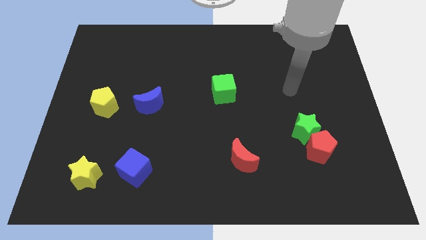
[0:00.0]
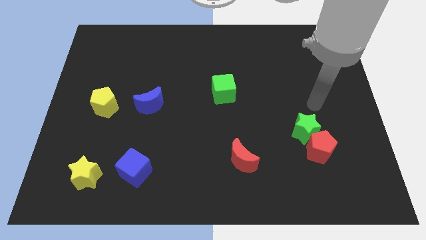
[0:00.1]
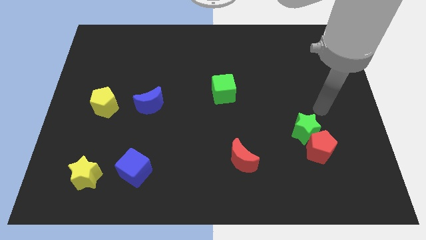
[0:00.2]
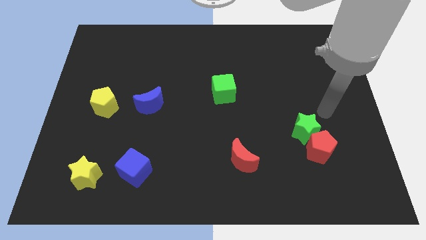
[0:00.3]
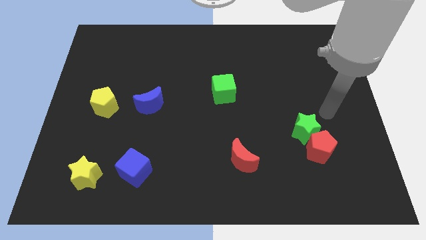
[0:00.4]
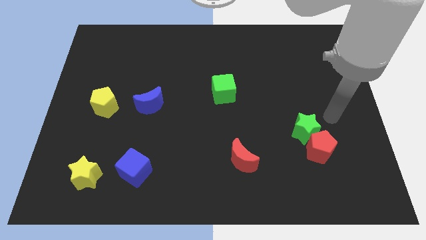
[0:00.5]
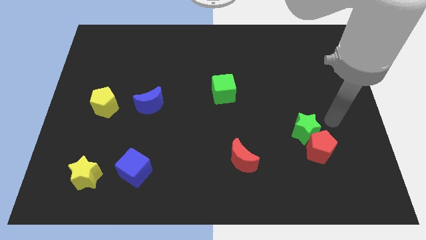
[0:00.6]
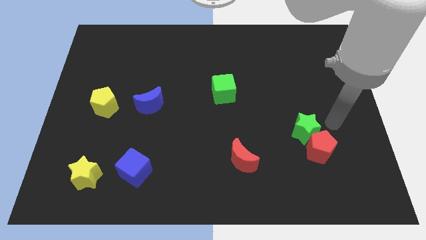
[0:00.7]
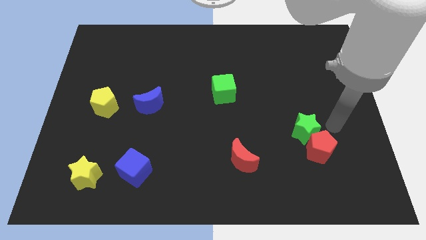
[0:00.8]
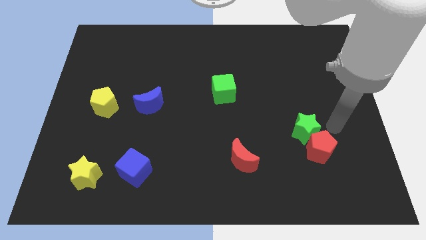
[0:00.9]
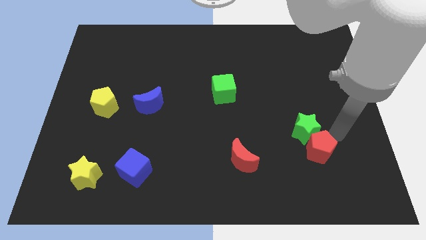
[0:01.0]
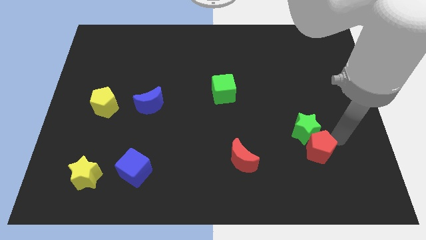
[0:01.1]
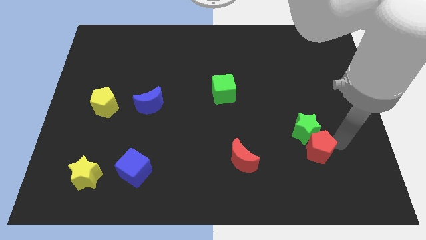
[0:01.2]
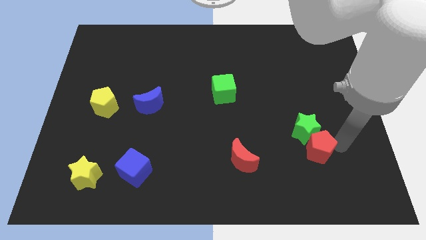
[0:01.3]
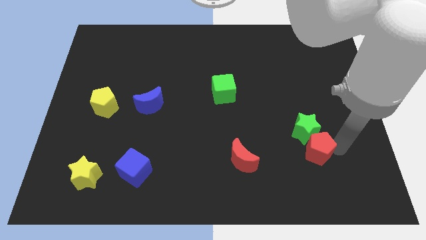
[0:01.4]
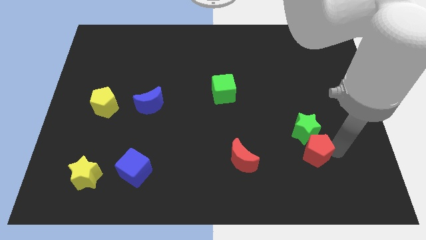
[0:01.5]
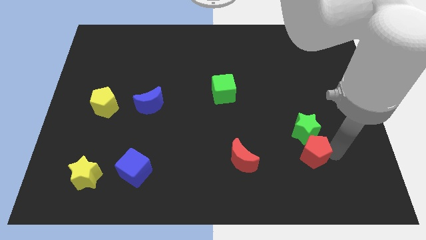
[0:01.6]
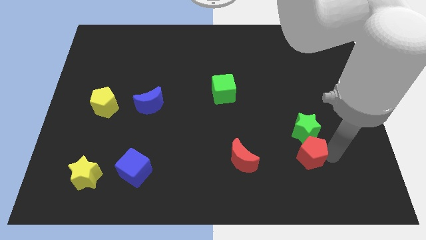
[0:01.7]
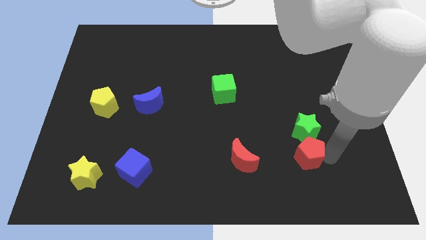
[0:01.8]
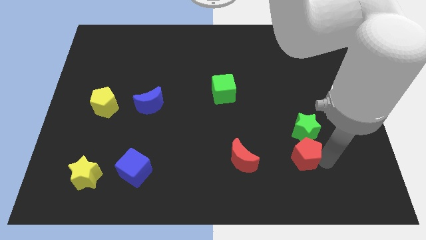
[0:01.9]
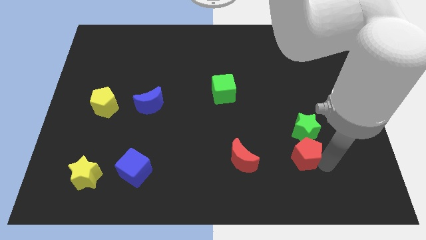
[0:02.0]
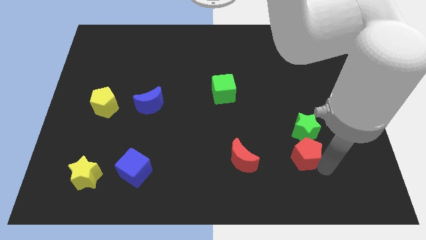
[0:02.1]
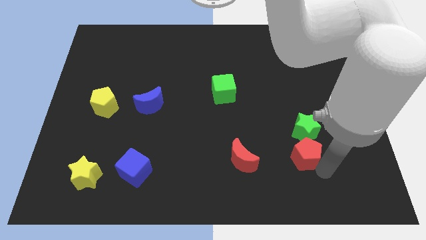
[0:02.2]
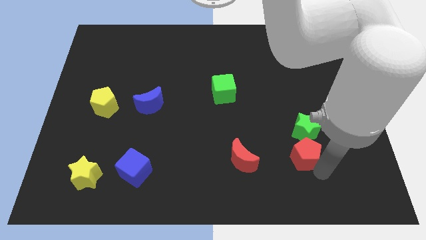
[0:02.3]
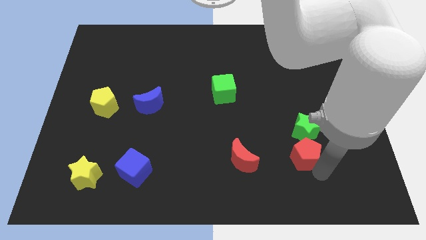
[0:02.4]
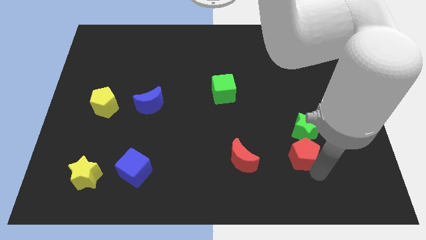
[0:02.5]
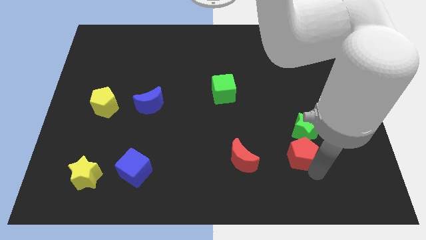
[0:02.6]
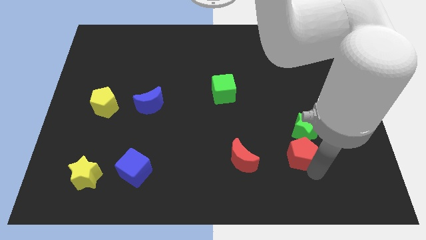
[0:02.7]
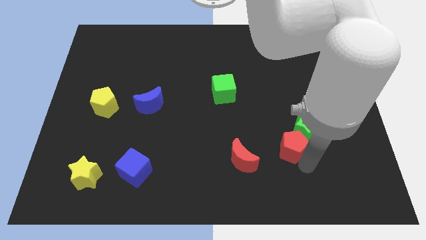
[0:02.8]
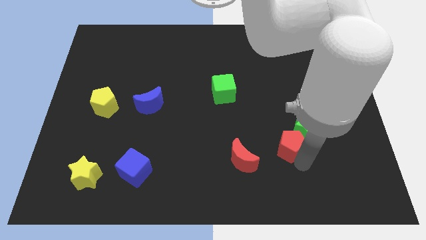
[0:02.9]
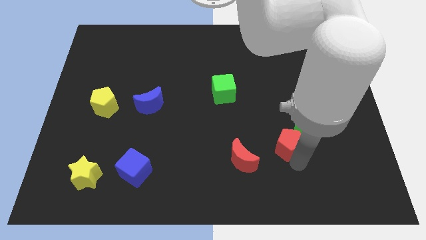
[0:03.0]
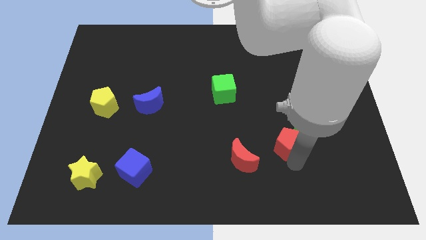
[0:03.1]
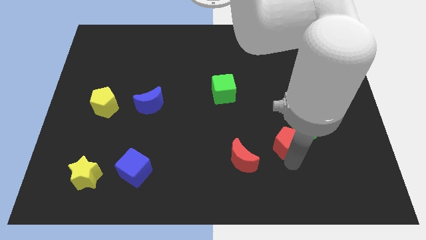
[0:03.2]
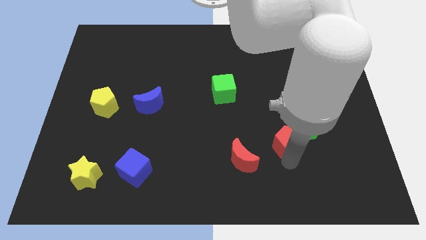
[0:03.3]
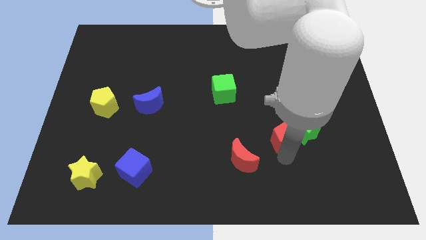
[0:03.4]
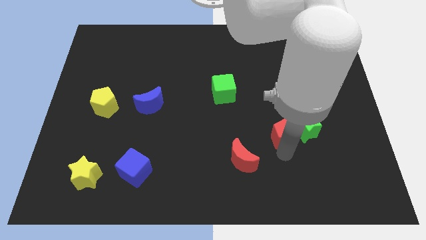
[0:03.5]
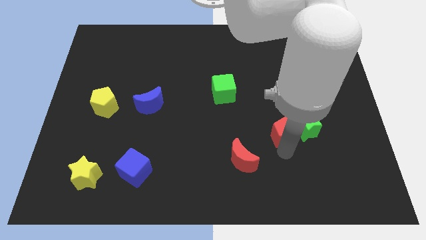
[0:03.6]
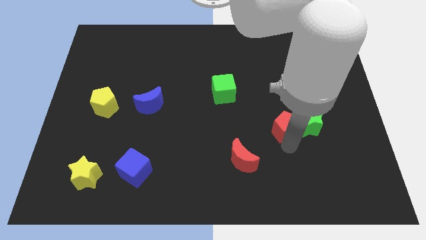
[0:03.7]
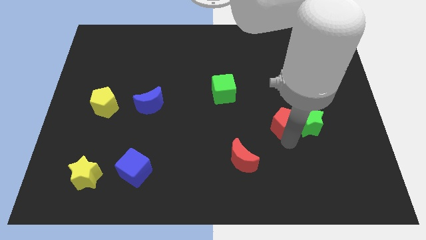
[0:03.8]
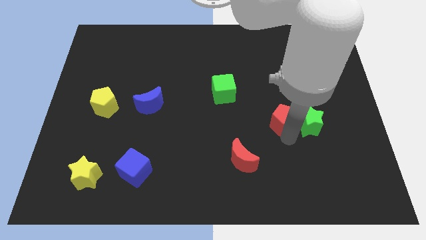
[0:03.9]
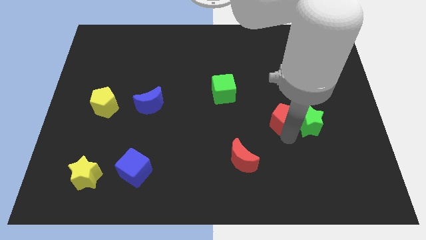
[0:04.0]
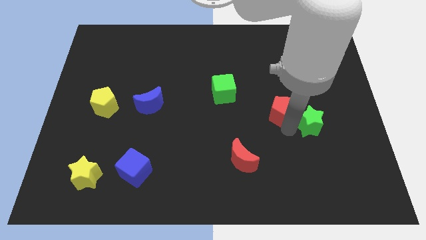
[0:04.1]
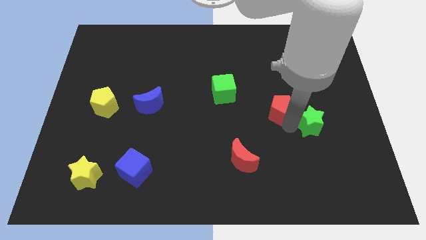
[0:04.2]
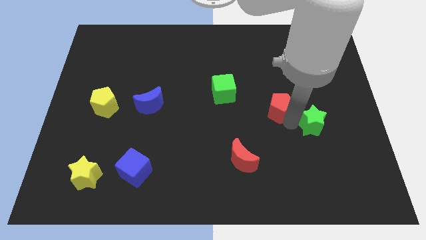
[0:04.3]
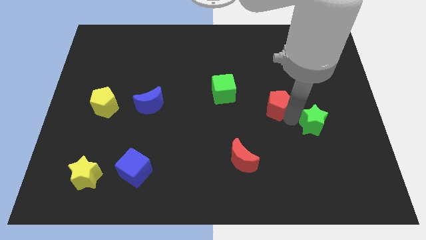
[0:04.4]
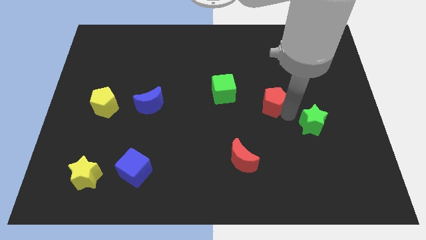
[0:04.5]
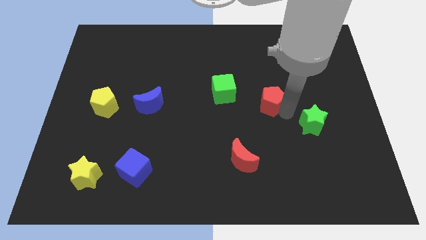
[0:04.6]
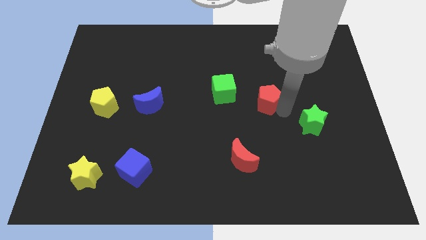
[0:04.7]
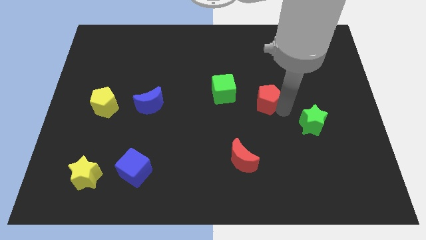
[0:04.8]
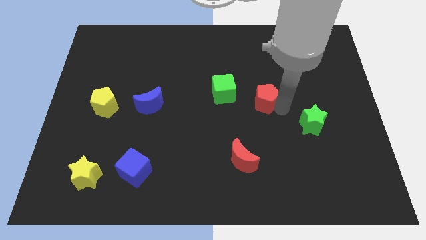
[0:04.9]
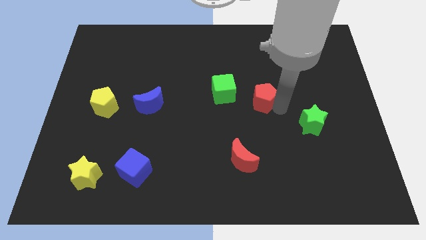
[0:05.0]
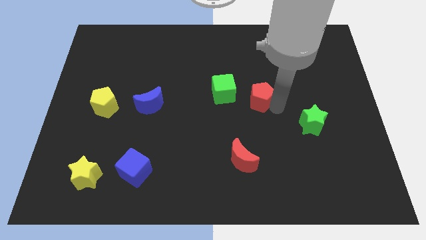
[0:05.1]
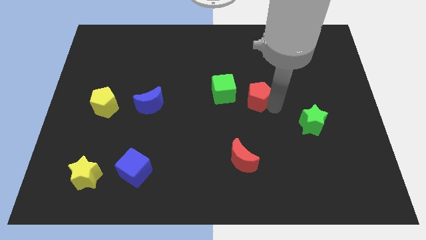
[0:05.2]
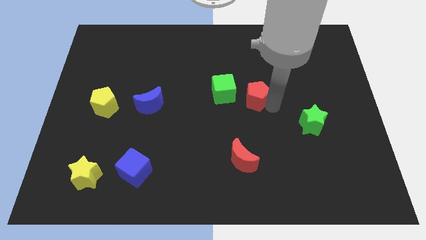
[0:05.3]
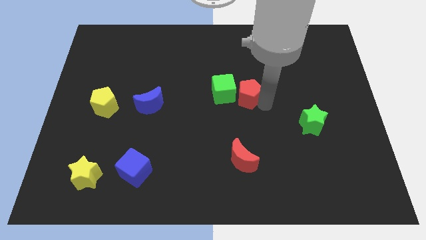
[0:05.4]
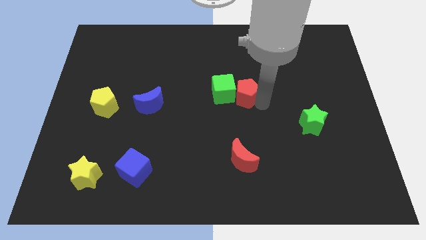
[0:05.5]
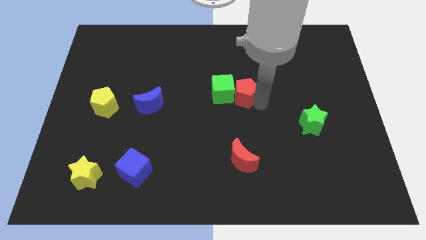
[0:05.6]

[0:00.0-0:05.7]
slide the red pentagon next to the green cube

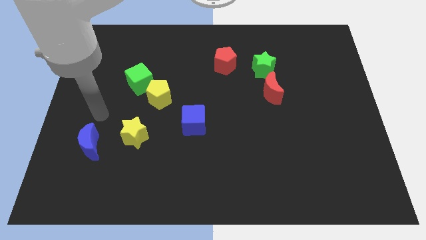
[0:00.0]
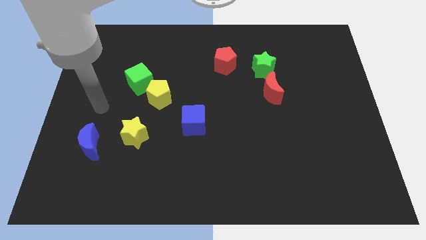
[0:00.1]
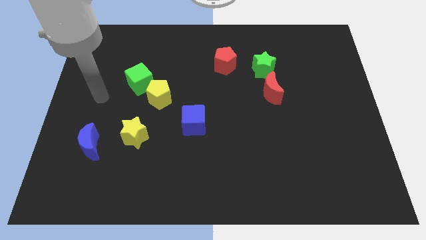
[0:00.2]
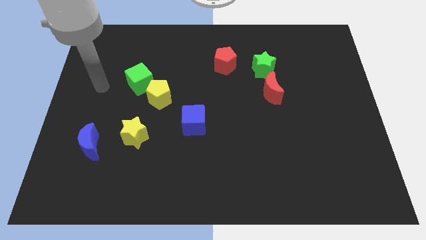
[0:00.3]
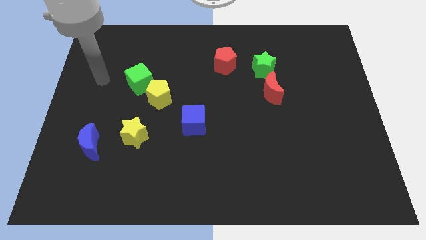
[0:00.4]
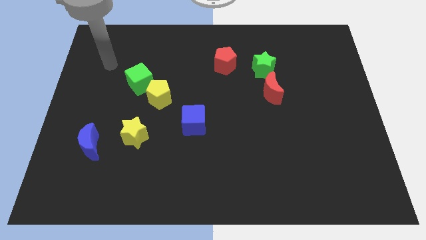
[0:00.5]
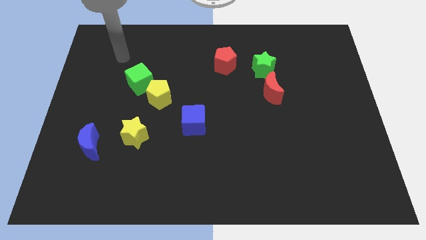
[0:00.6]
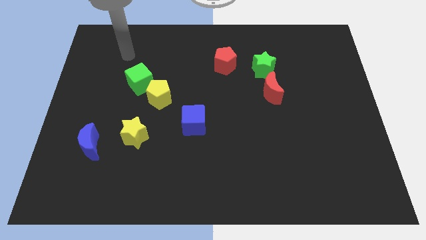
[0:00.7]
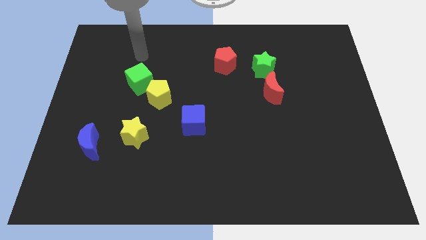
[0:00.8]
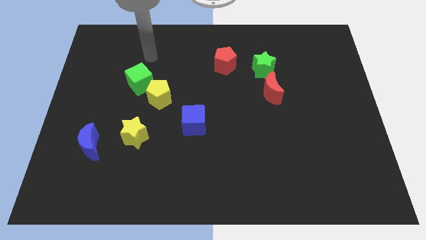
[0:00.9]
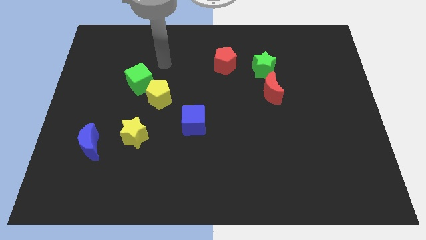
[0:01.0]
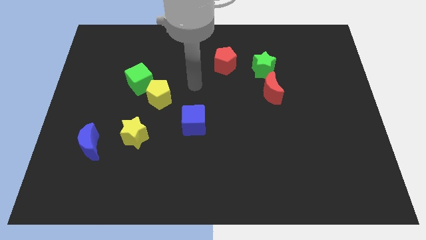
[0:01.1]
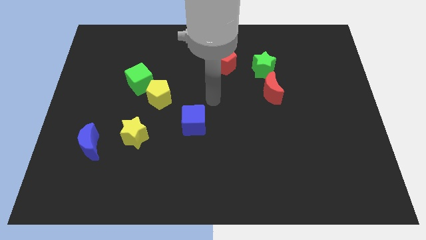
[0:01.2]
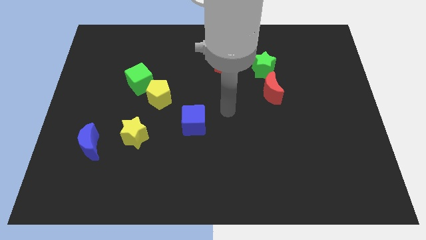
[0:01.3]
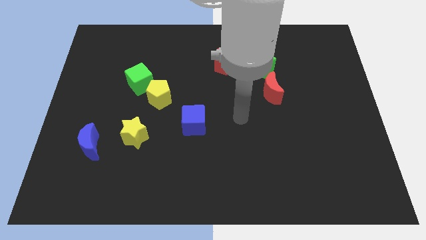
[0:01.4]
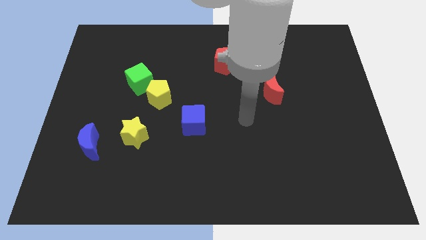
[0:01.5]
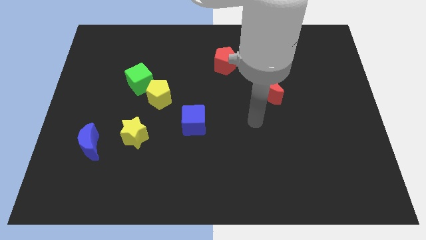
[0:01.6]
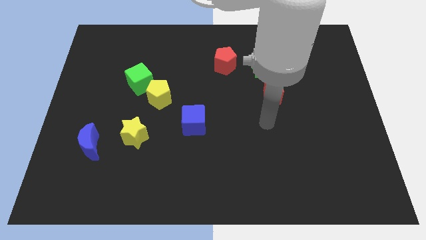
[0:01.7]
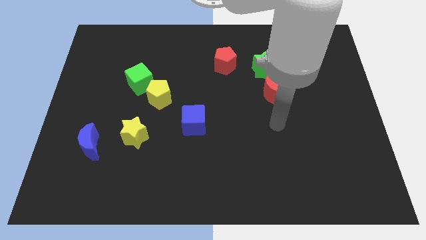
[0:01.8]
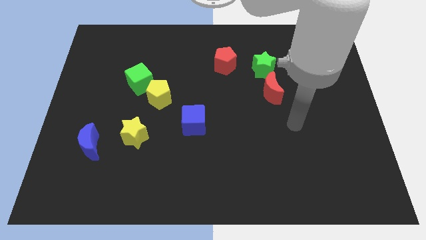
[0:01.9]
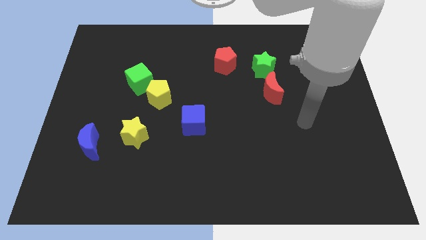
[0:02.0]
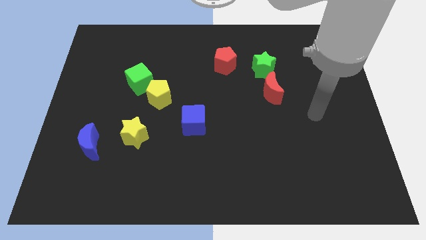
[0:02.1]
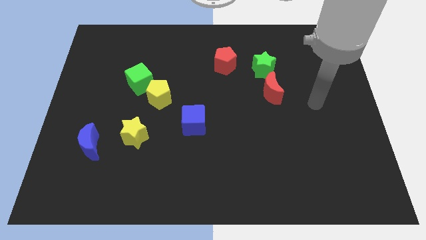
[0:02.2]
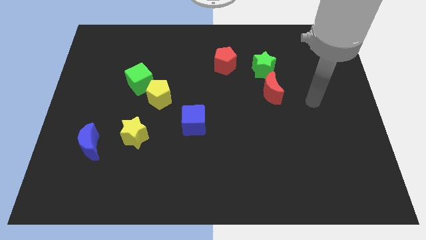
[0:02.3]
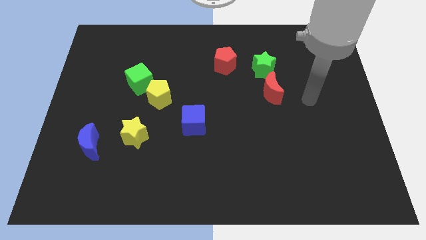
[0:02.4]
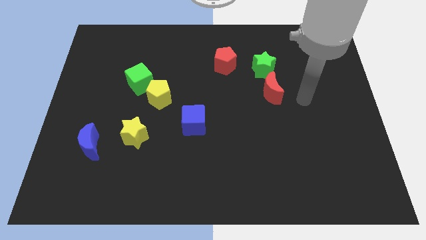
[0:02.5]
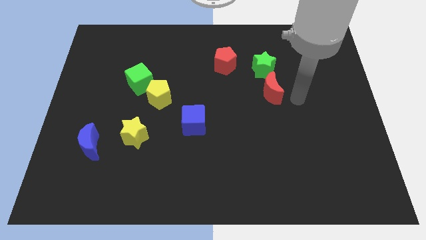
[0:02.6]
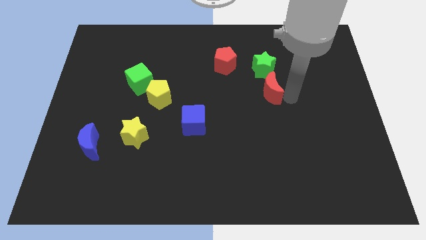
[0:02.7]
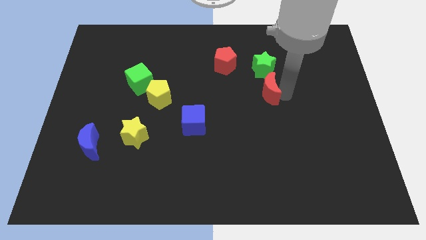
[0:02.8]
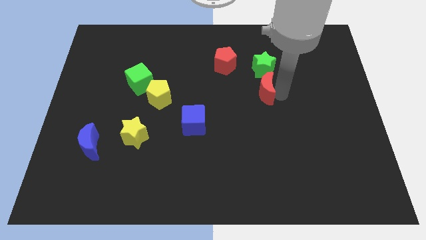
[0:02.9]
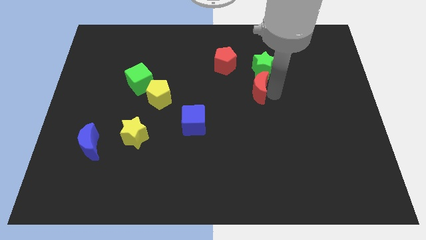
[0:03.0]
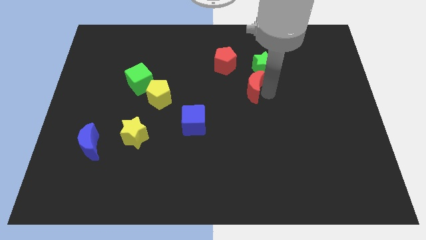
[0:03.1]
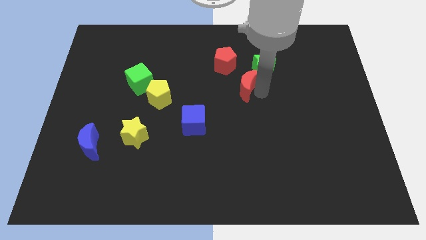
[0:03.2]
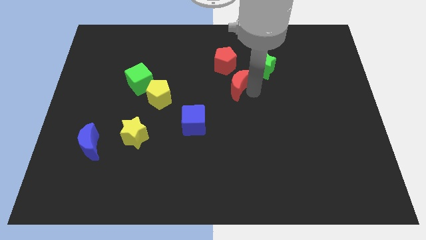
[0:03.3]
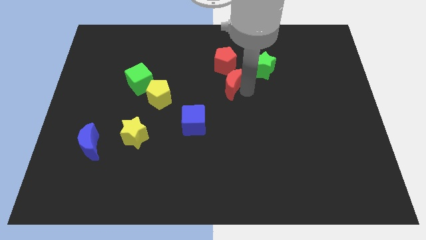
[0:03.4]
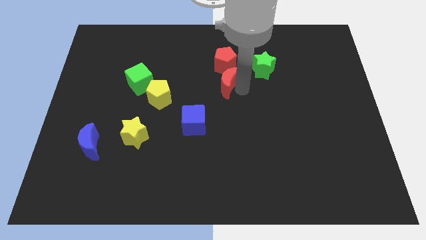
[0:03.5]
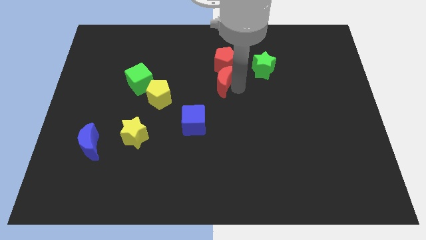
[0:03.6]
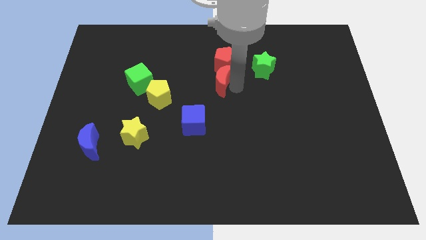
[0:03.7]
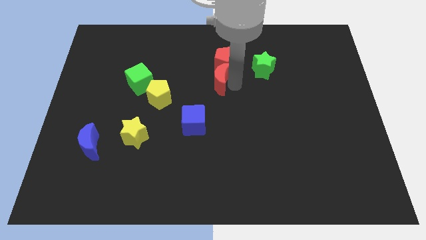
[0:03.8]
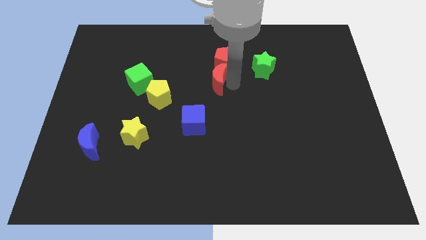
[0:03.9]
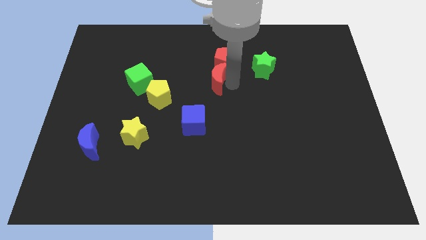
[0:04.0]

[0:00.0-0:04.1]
move the red moon close to the red pentagon
